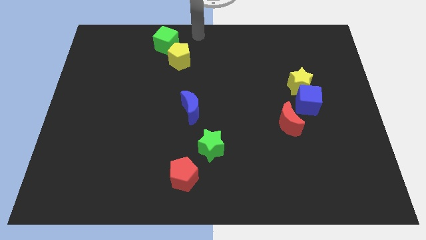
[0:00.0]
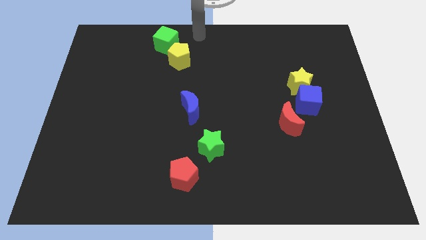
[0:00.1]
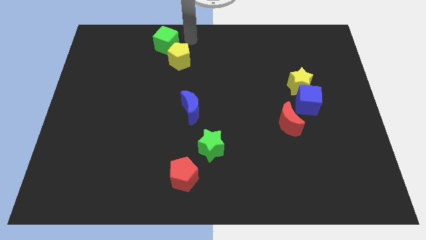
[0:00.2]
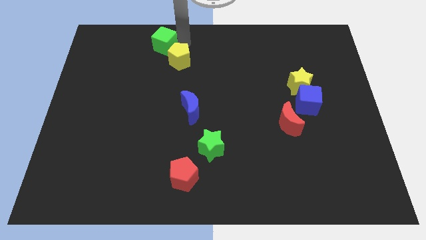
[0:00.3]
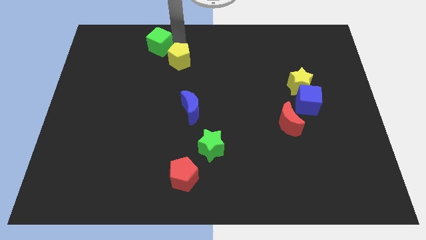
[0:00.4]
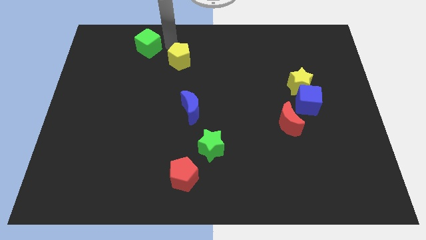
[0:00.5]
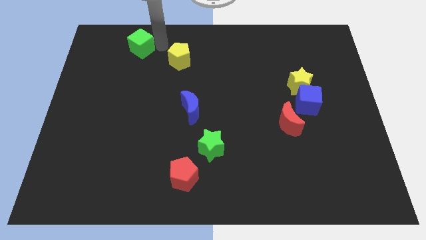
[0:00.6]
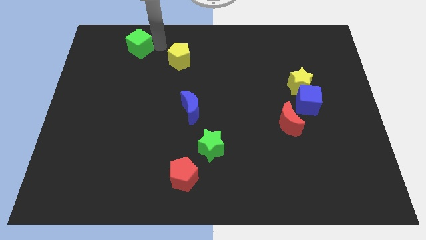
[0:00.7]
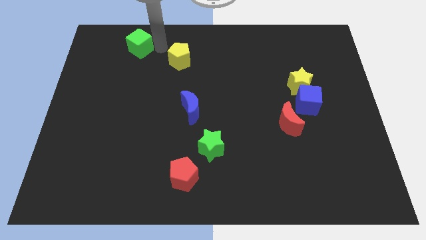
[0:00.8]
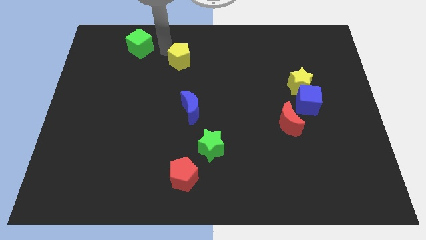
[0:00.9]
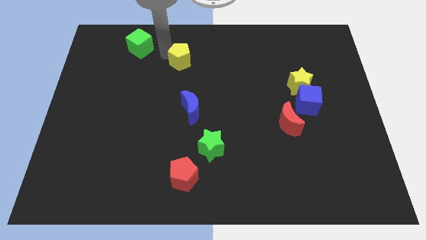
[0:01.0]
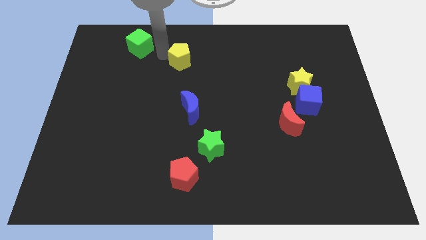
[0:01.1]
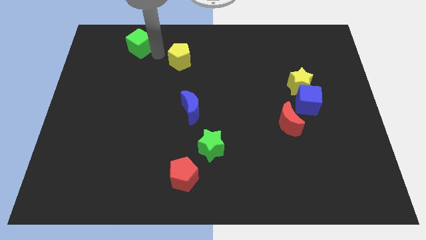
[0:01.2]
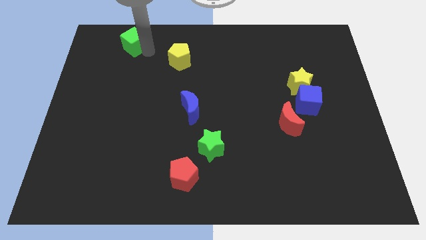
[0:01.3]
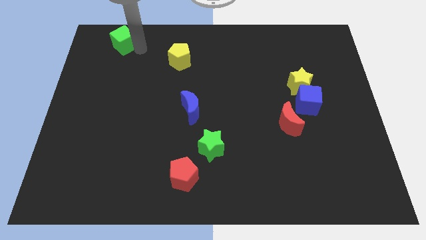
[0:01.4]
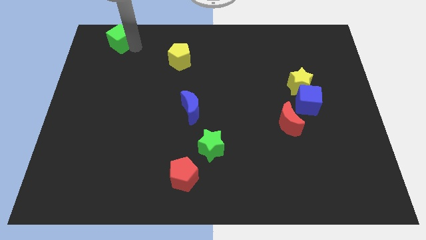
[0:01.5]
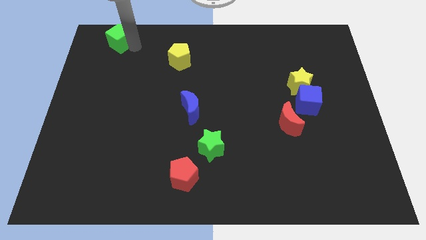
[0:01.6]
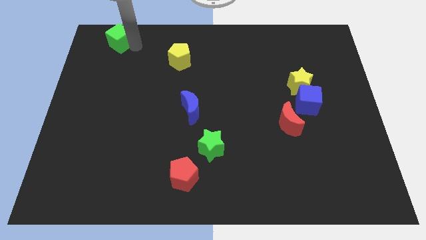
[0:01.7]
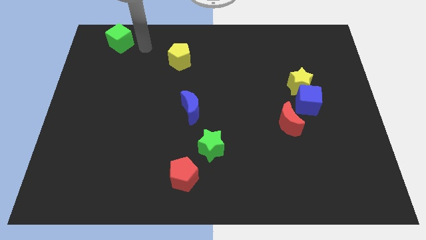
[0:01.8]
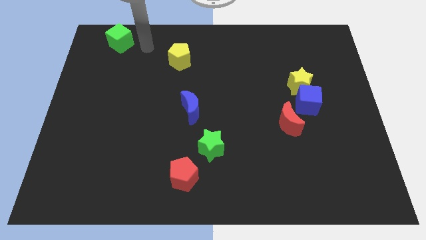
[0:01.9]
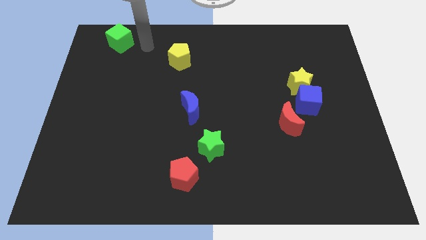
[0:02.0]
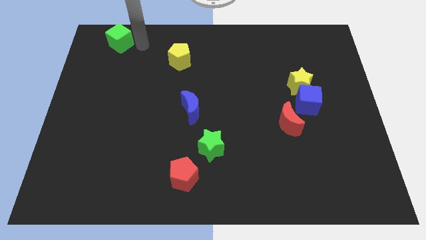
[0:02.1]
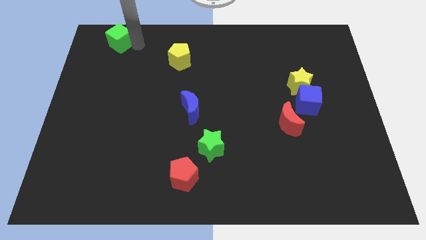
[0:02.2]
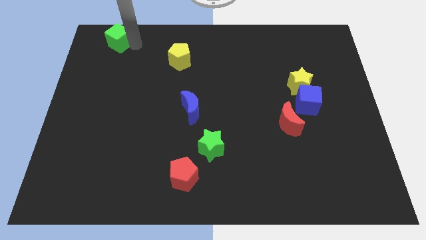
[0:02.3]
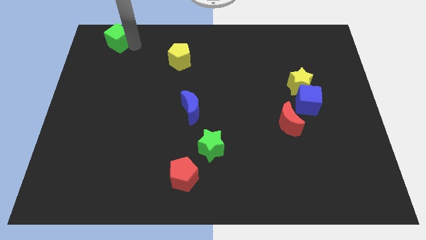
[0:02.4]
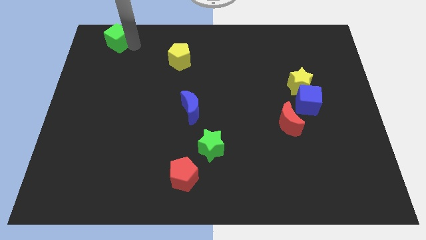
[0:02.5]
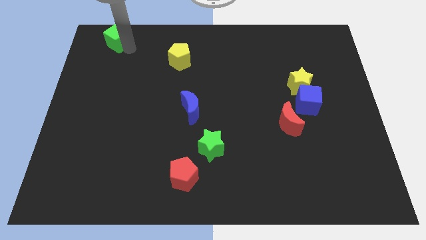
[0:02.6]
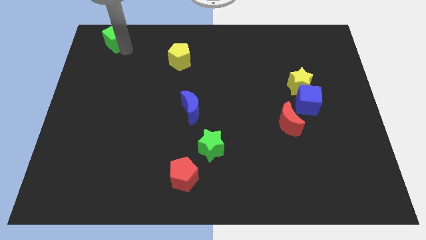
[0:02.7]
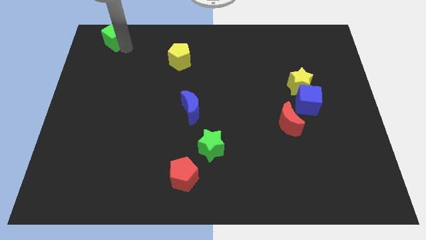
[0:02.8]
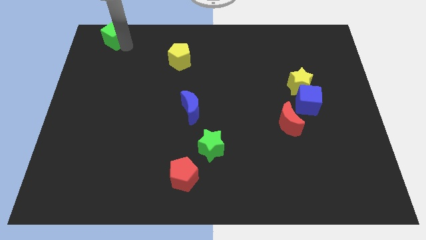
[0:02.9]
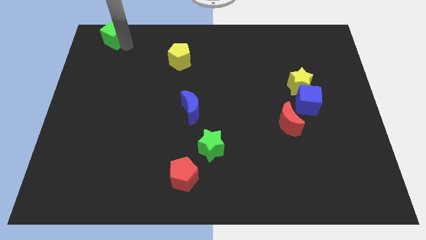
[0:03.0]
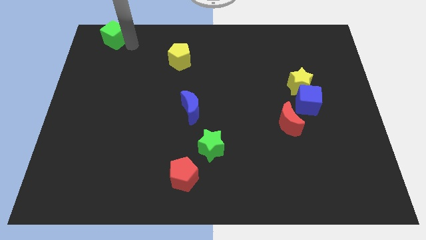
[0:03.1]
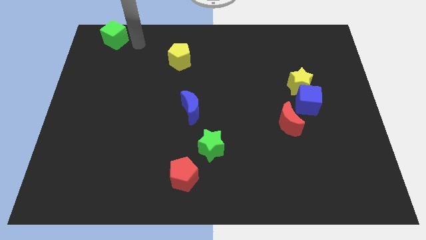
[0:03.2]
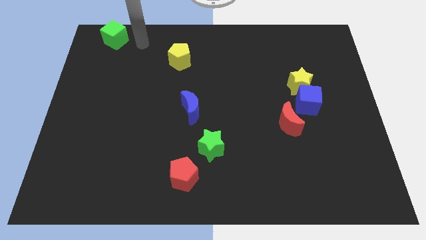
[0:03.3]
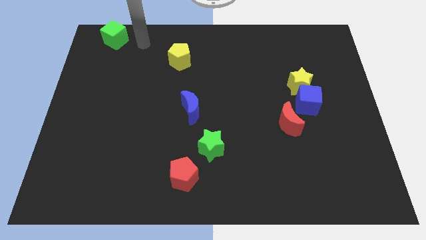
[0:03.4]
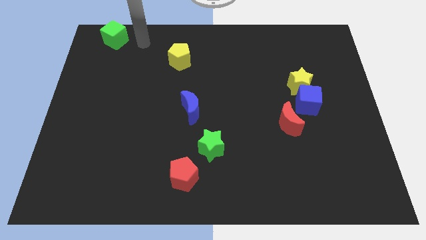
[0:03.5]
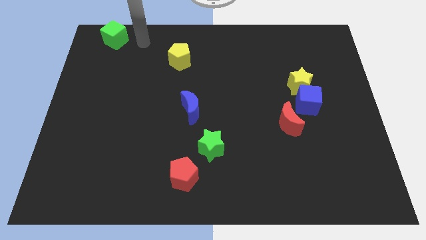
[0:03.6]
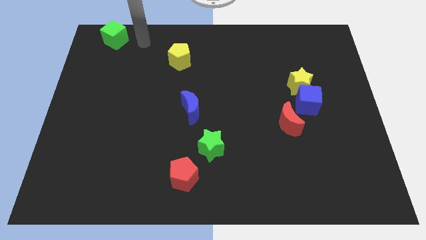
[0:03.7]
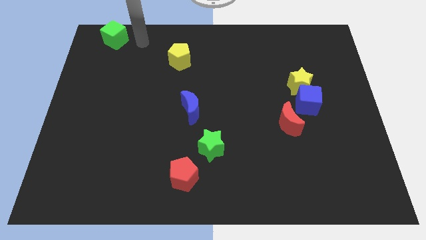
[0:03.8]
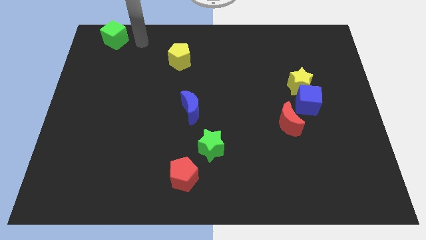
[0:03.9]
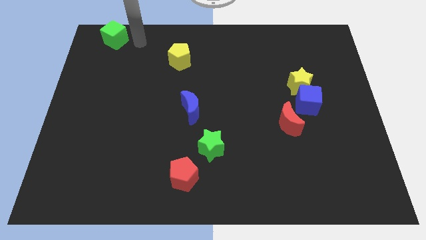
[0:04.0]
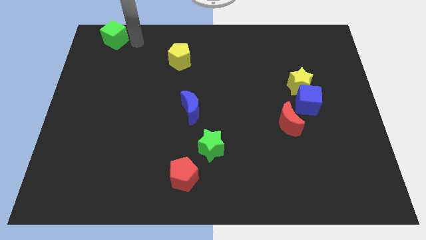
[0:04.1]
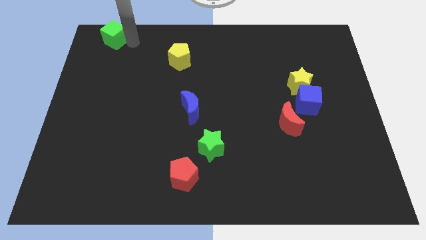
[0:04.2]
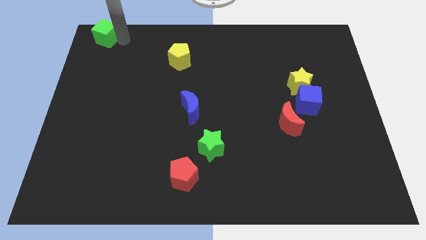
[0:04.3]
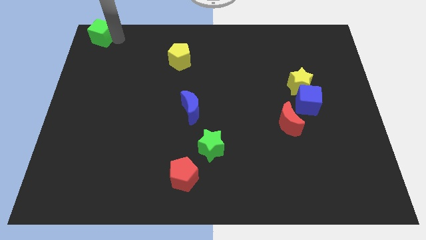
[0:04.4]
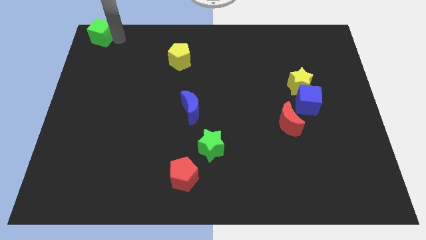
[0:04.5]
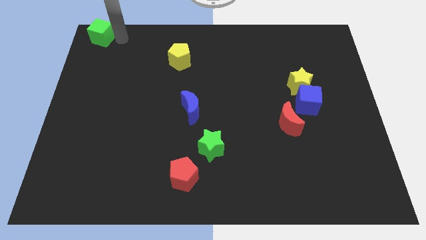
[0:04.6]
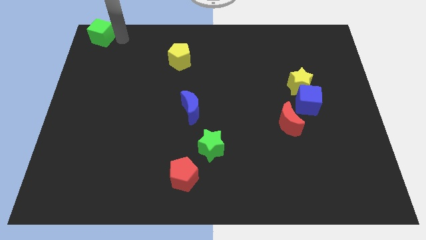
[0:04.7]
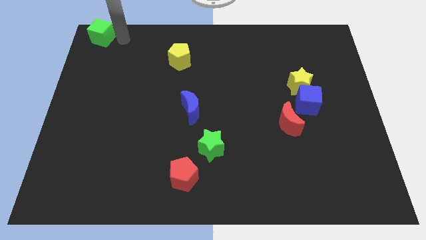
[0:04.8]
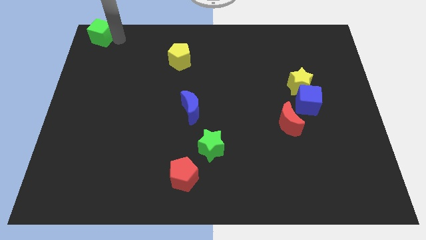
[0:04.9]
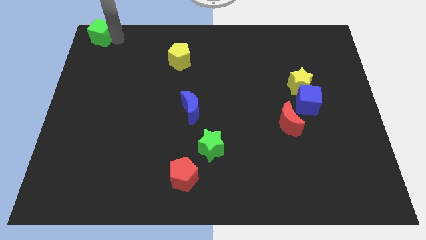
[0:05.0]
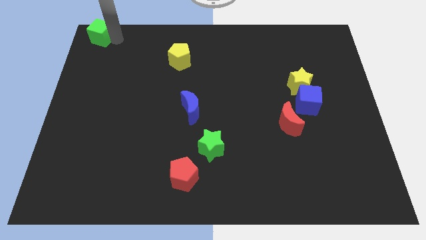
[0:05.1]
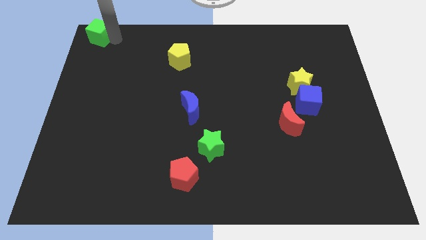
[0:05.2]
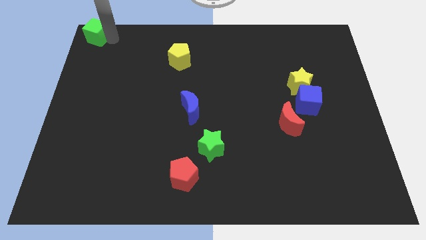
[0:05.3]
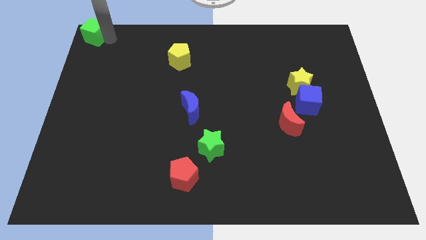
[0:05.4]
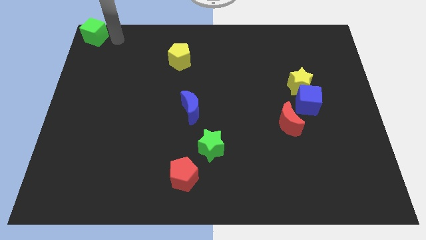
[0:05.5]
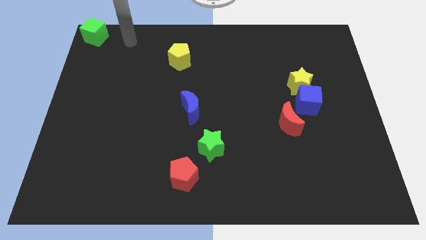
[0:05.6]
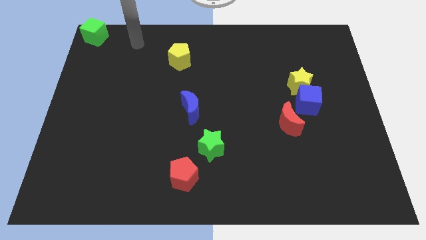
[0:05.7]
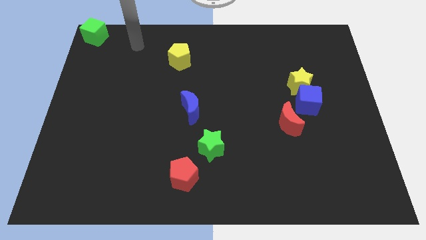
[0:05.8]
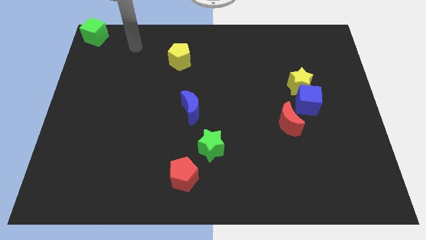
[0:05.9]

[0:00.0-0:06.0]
push the green cube towards the top left corner of the board

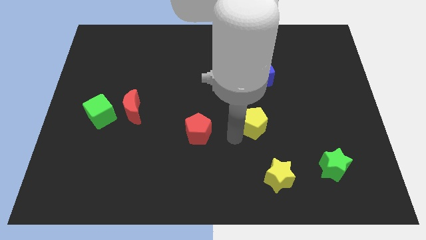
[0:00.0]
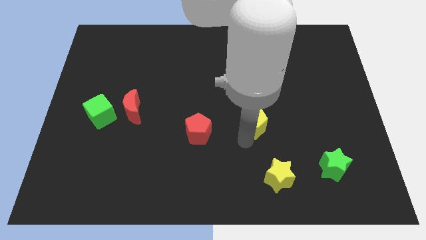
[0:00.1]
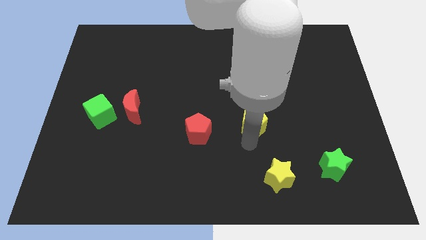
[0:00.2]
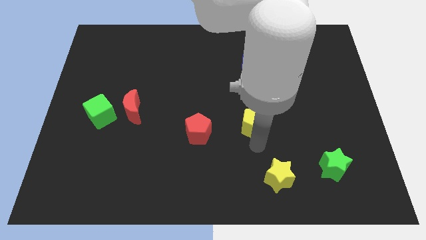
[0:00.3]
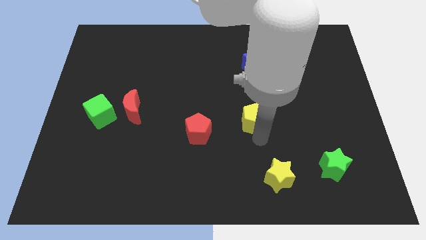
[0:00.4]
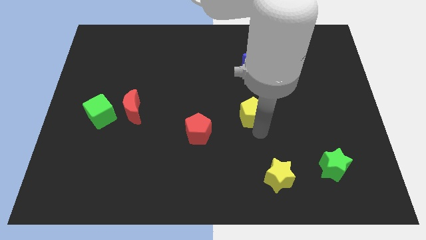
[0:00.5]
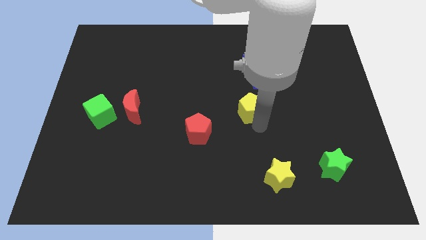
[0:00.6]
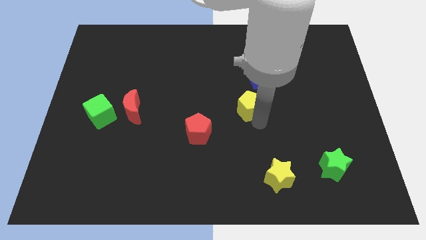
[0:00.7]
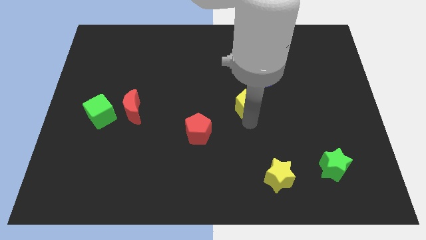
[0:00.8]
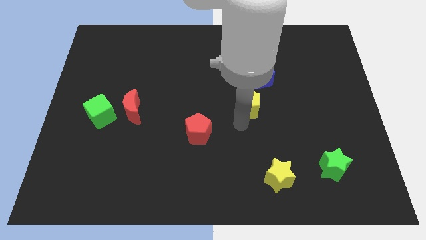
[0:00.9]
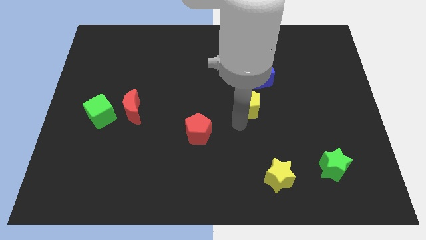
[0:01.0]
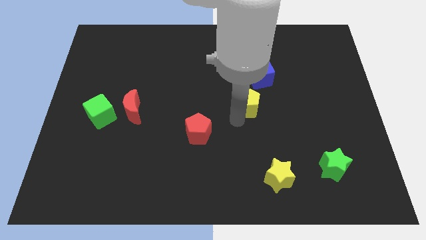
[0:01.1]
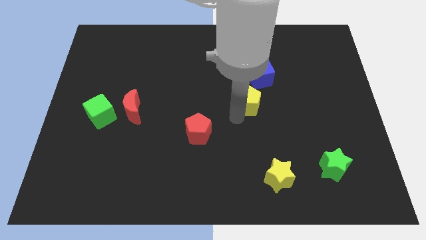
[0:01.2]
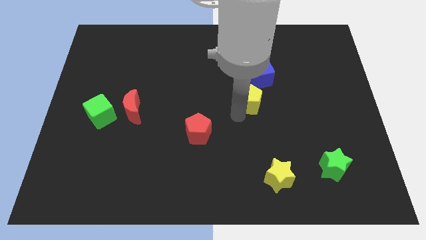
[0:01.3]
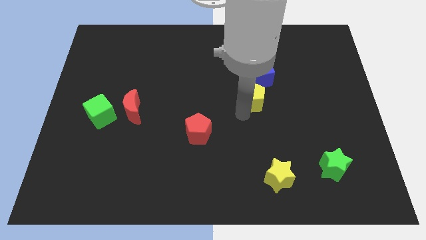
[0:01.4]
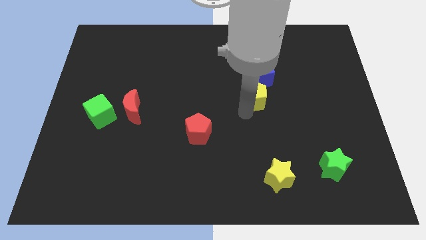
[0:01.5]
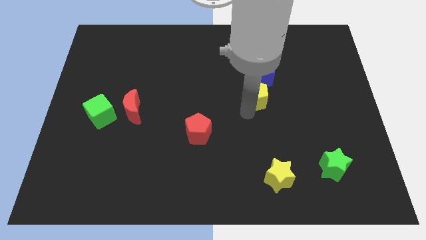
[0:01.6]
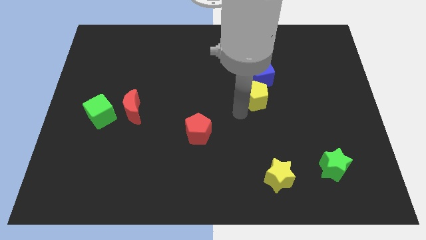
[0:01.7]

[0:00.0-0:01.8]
push the yellow pentagon into the blue cube

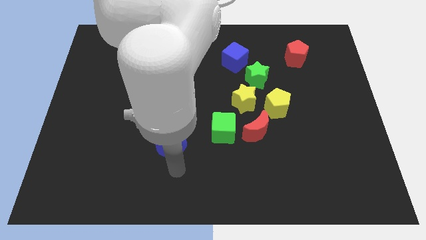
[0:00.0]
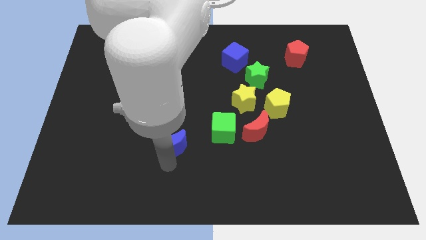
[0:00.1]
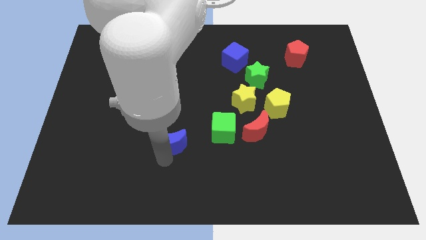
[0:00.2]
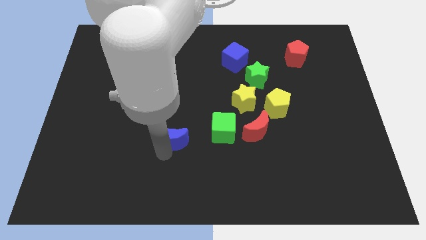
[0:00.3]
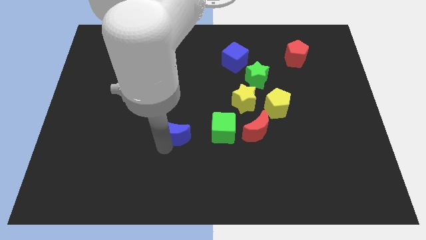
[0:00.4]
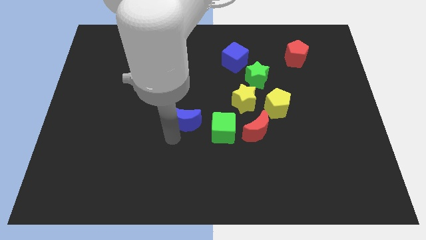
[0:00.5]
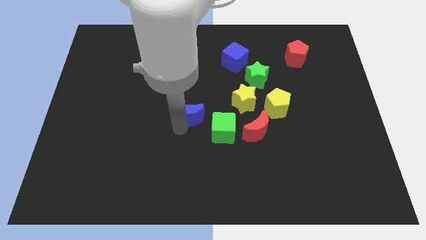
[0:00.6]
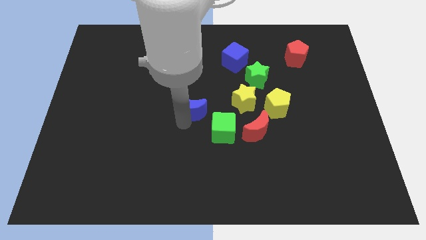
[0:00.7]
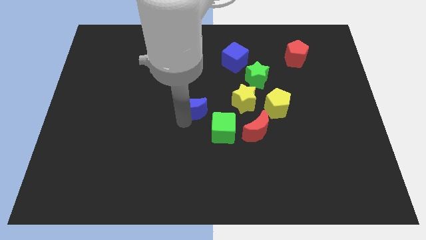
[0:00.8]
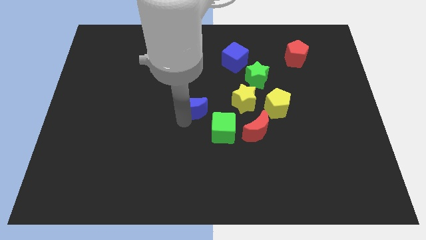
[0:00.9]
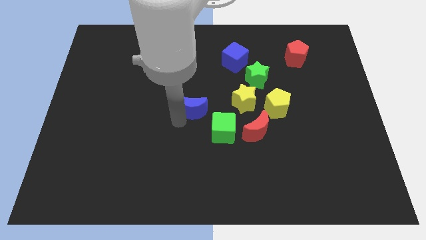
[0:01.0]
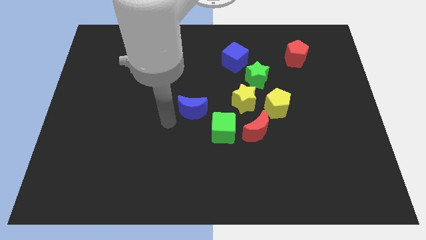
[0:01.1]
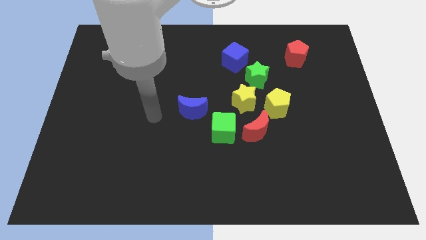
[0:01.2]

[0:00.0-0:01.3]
push the blue crescent to the center of the board
